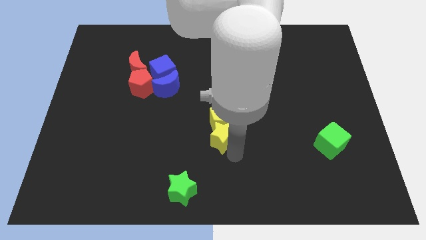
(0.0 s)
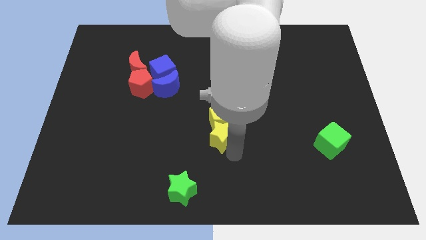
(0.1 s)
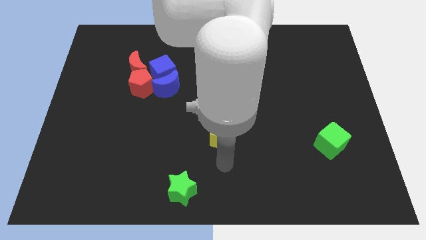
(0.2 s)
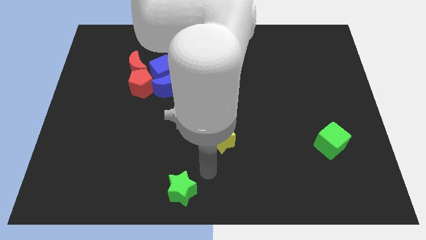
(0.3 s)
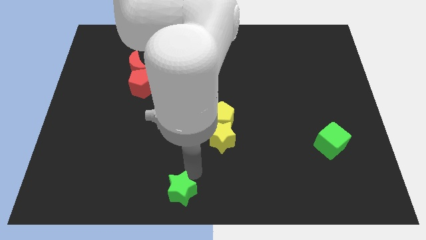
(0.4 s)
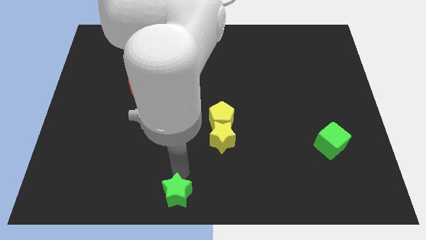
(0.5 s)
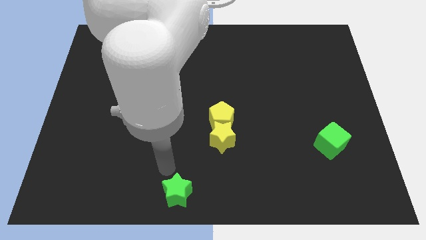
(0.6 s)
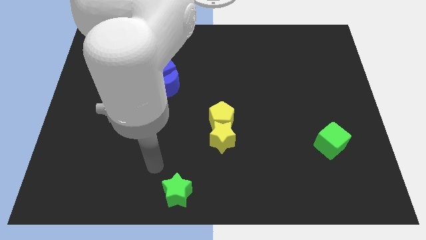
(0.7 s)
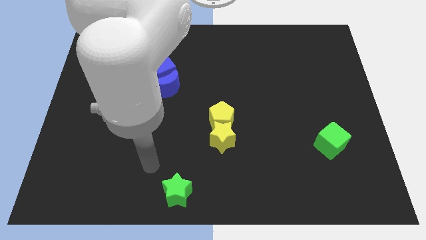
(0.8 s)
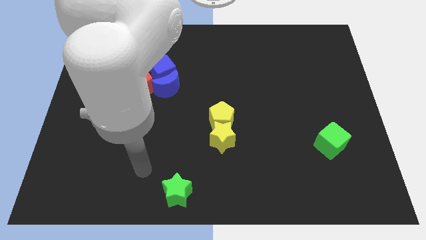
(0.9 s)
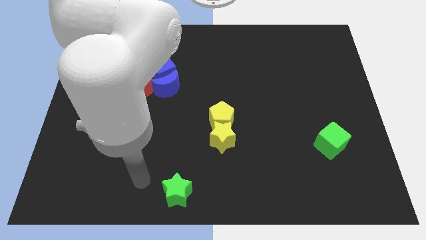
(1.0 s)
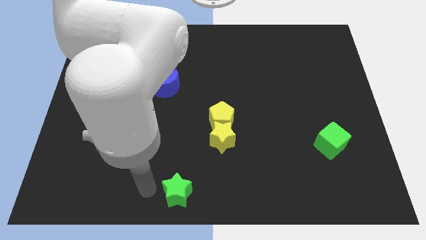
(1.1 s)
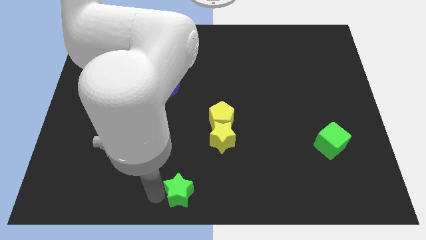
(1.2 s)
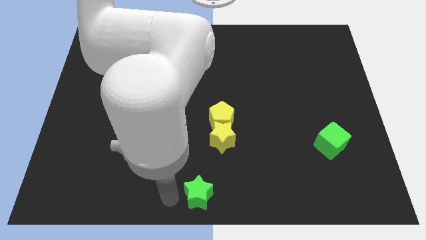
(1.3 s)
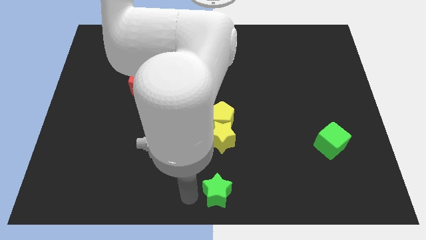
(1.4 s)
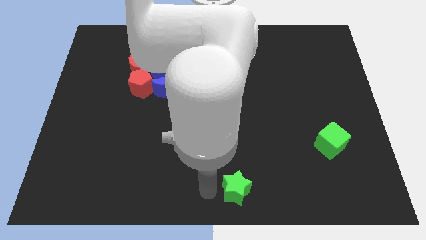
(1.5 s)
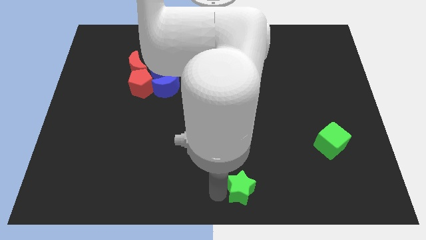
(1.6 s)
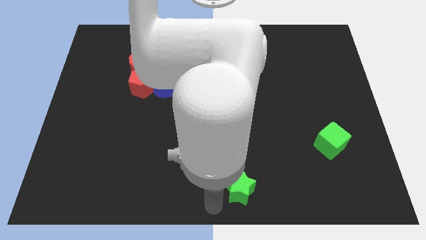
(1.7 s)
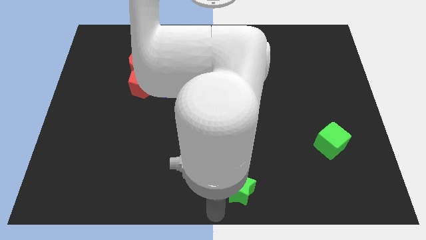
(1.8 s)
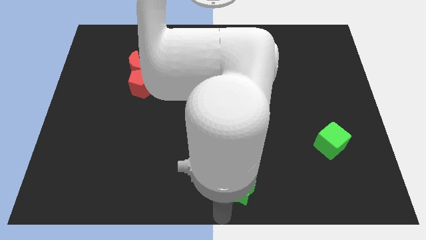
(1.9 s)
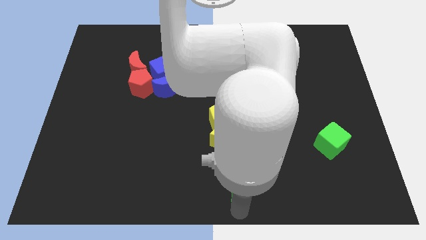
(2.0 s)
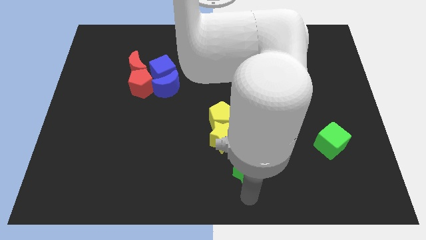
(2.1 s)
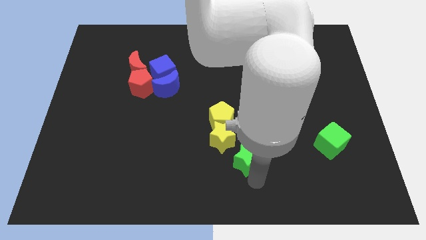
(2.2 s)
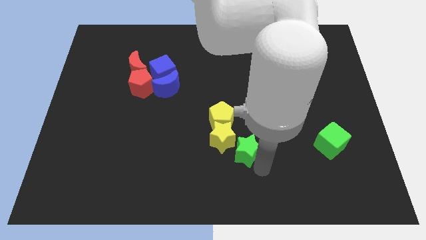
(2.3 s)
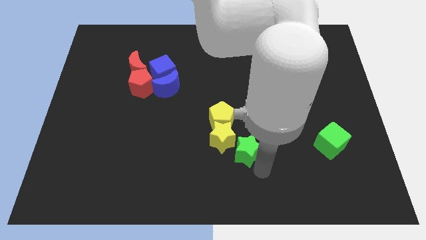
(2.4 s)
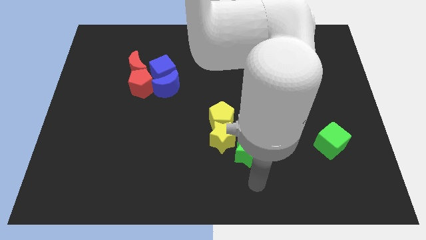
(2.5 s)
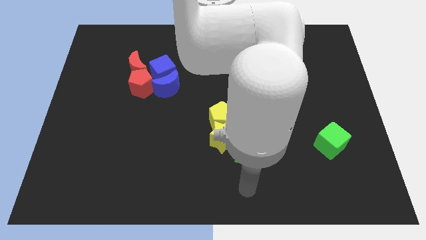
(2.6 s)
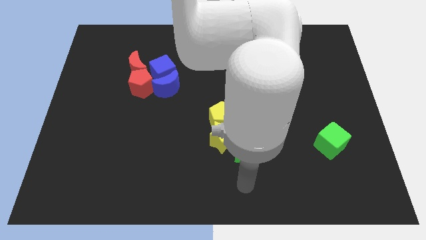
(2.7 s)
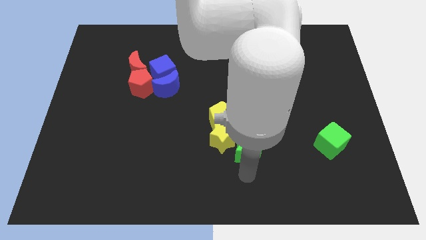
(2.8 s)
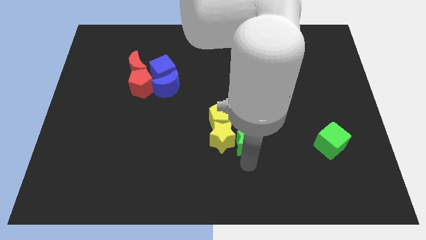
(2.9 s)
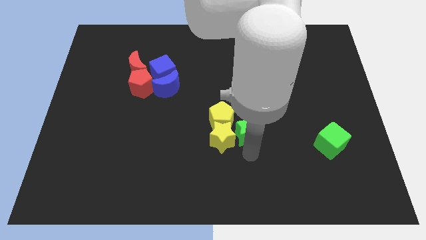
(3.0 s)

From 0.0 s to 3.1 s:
place the green star to the right of the yellow star

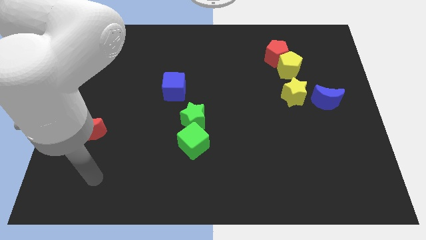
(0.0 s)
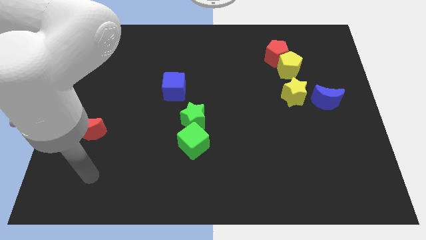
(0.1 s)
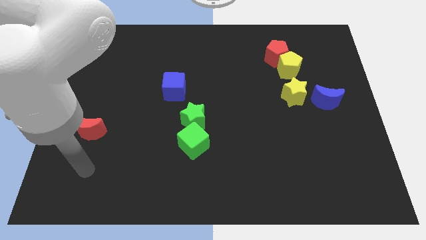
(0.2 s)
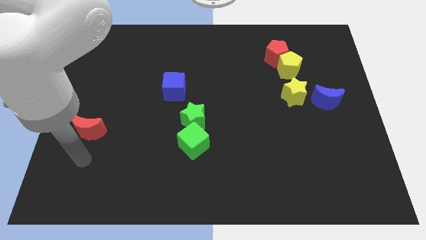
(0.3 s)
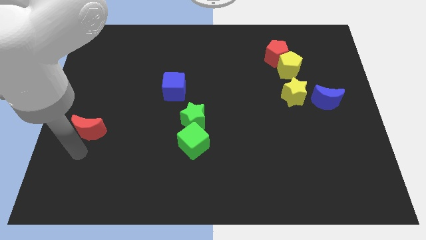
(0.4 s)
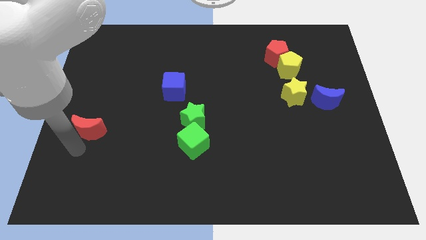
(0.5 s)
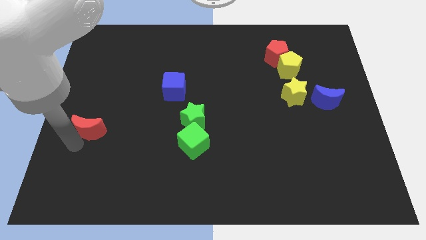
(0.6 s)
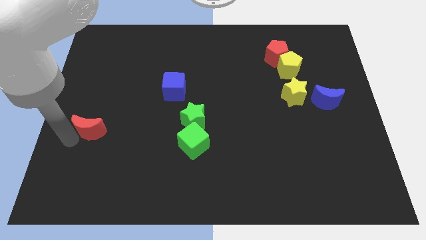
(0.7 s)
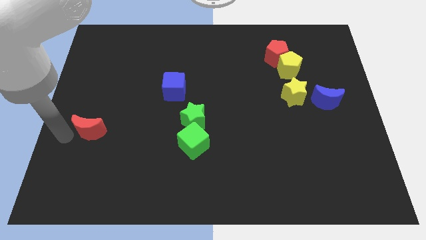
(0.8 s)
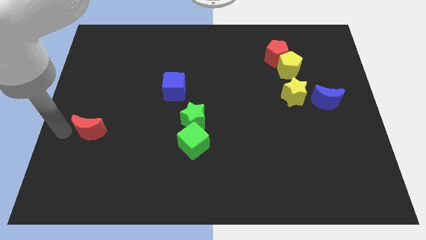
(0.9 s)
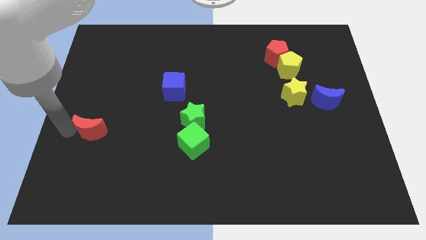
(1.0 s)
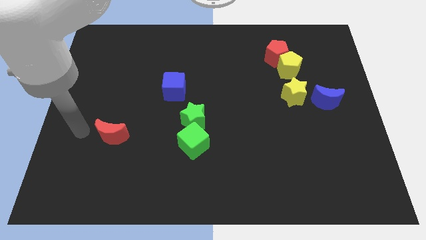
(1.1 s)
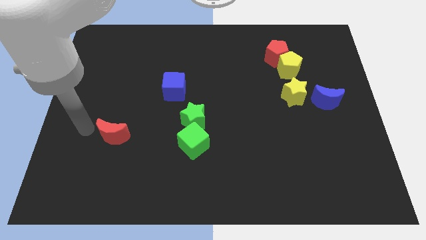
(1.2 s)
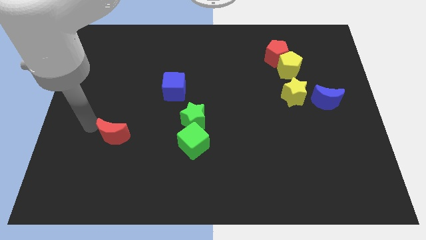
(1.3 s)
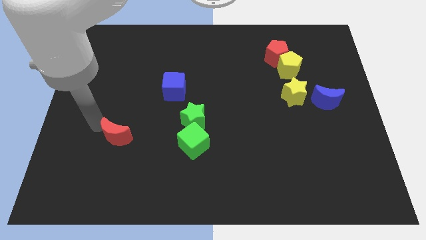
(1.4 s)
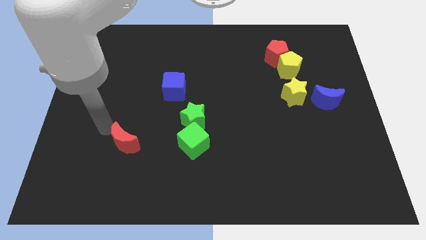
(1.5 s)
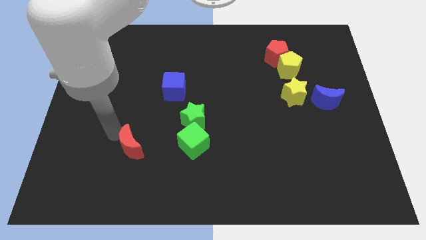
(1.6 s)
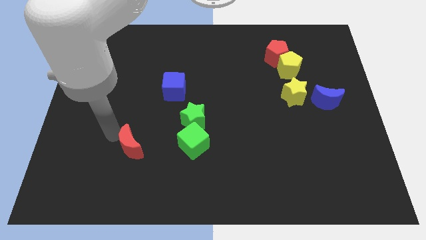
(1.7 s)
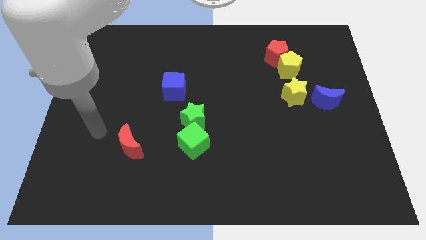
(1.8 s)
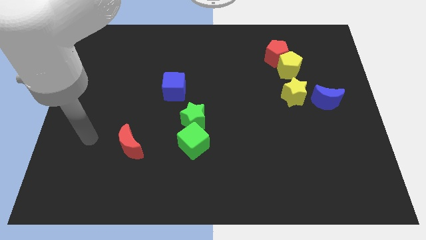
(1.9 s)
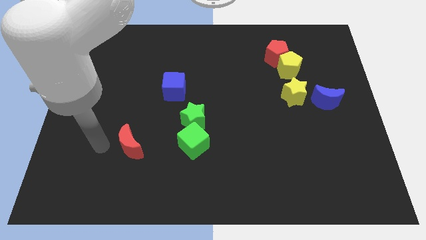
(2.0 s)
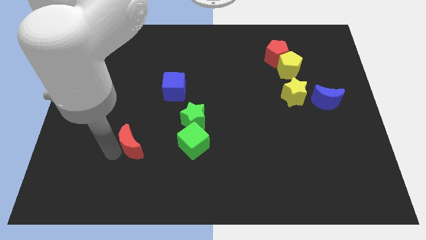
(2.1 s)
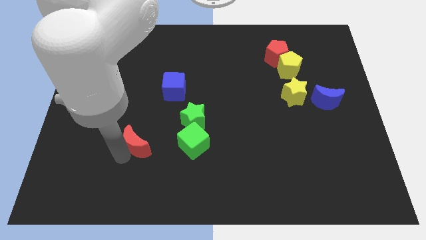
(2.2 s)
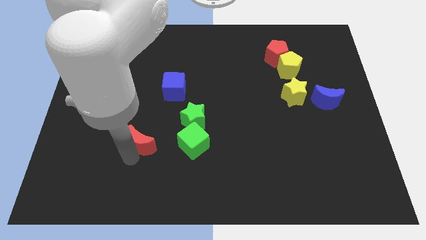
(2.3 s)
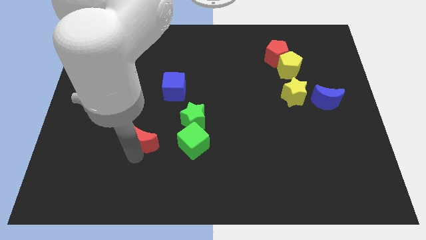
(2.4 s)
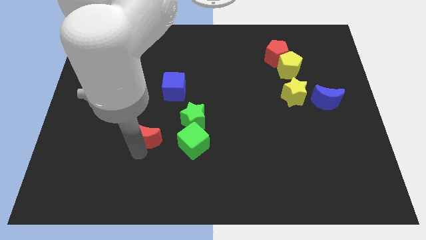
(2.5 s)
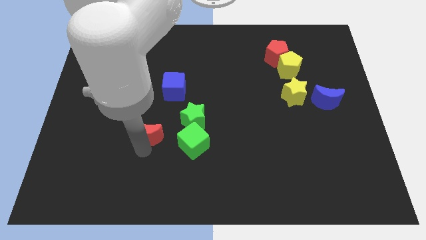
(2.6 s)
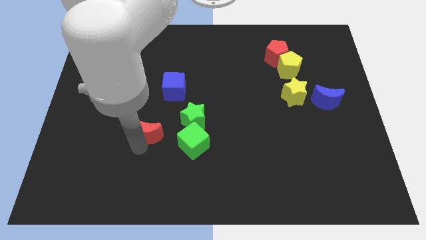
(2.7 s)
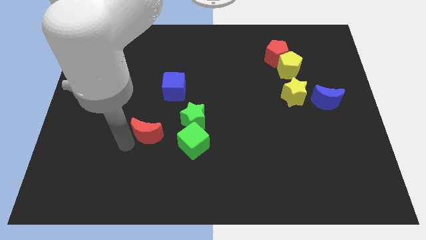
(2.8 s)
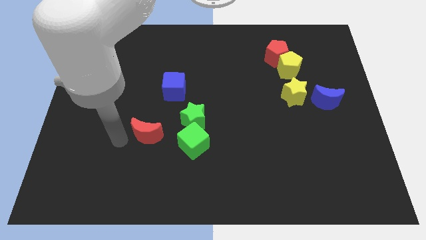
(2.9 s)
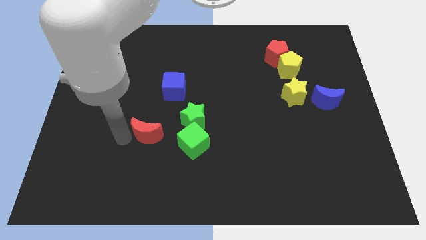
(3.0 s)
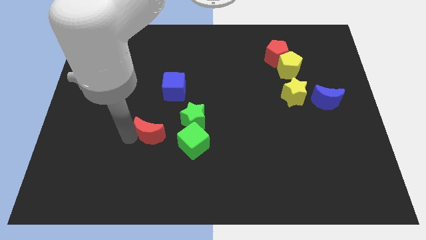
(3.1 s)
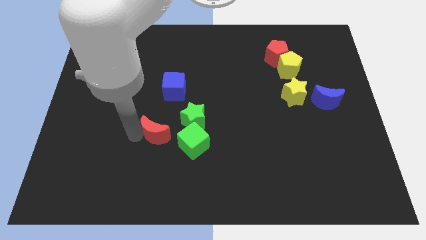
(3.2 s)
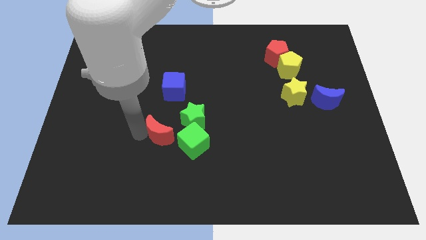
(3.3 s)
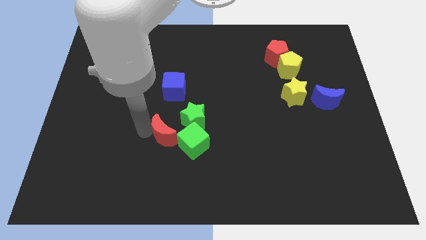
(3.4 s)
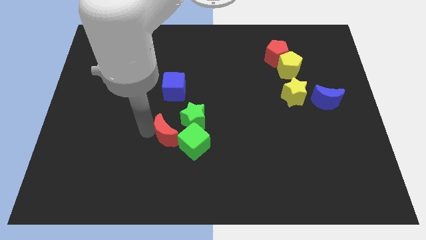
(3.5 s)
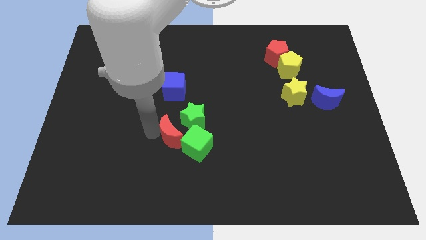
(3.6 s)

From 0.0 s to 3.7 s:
push the red moon close to left of green cube

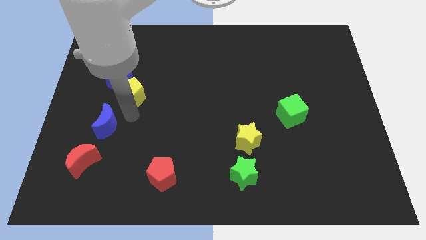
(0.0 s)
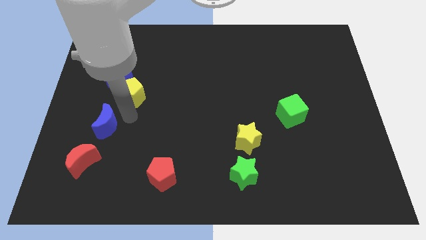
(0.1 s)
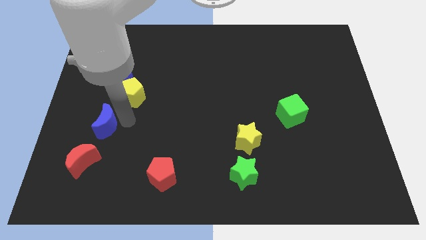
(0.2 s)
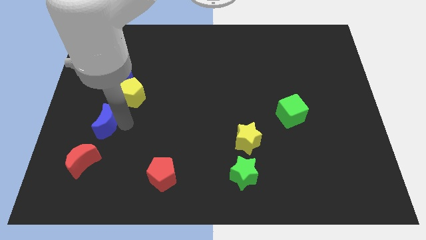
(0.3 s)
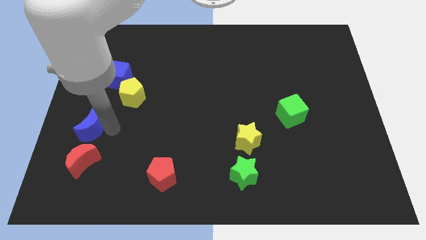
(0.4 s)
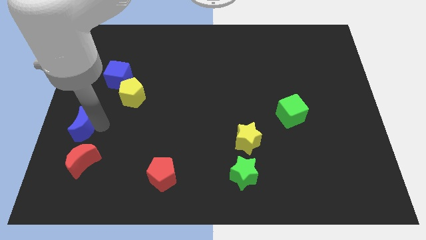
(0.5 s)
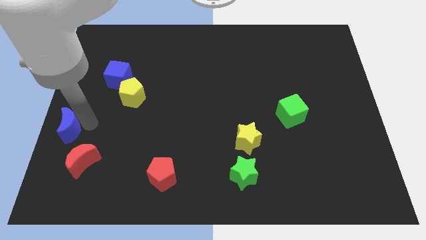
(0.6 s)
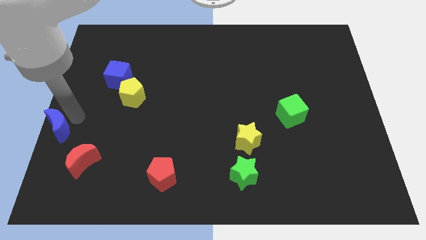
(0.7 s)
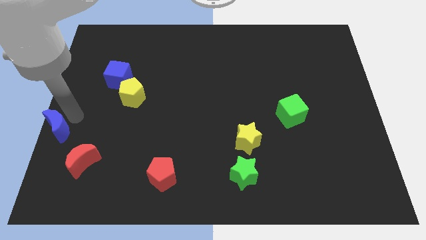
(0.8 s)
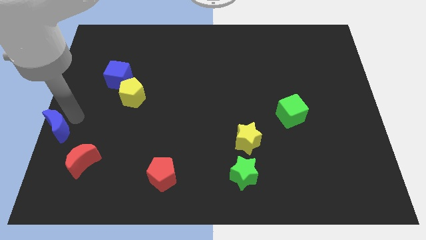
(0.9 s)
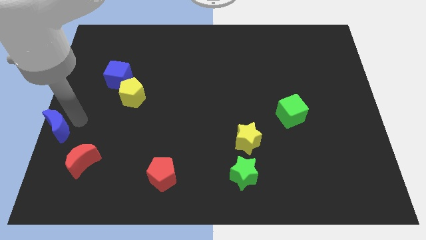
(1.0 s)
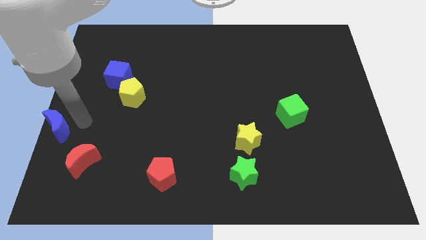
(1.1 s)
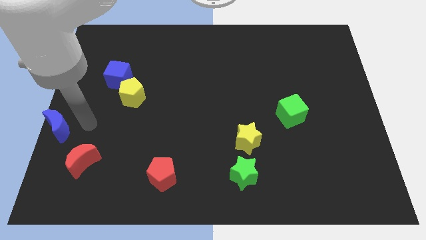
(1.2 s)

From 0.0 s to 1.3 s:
push the blue moon to the center left side of the board

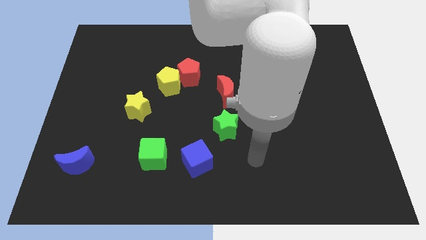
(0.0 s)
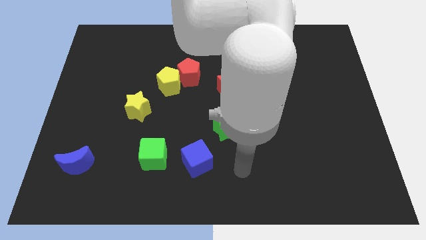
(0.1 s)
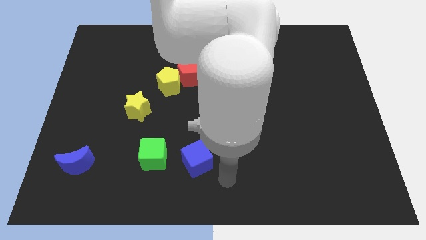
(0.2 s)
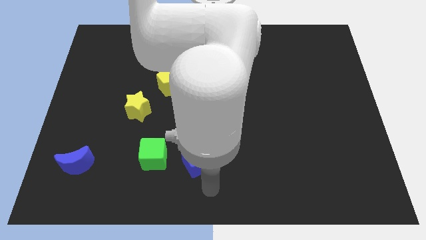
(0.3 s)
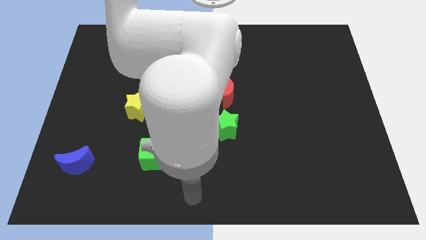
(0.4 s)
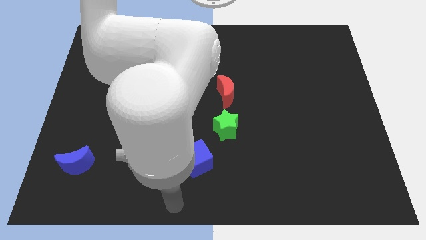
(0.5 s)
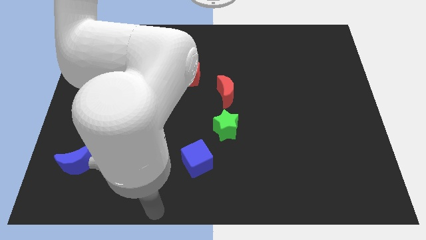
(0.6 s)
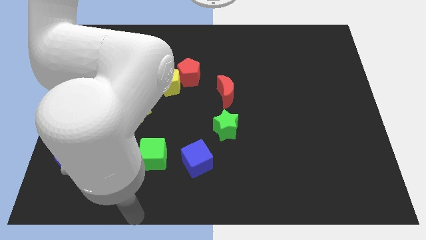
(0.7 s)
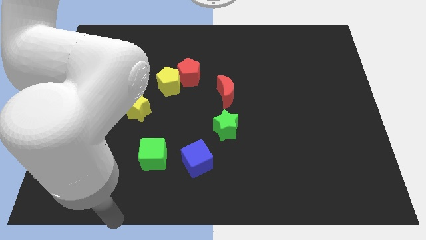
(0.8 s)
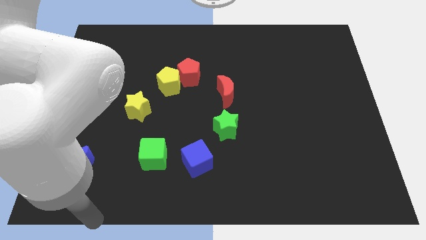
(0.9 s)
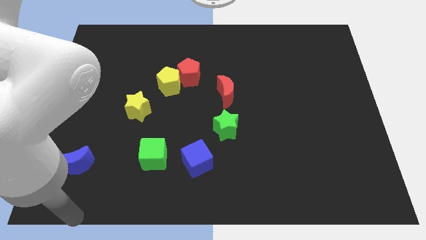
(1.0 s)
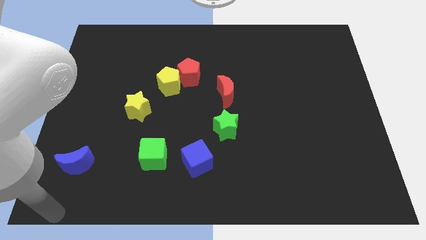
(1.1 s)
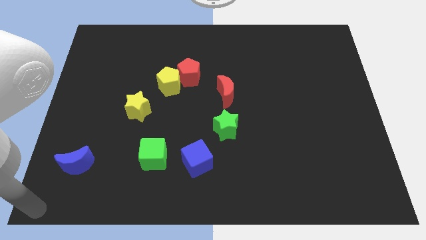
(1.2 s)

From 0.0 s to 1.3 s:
move your arm to the bottom left to the board
